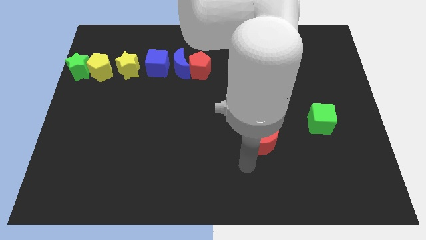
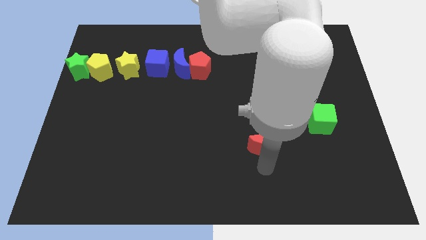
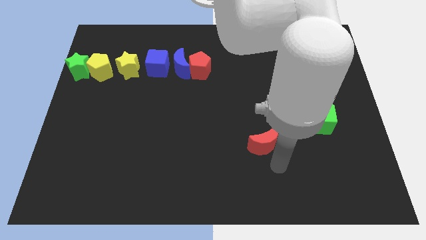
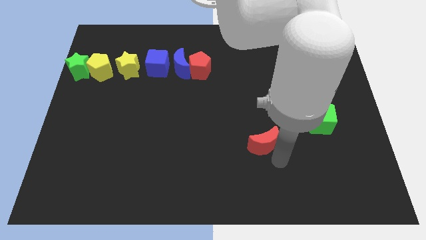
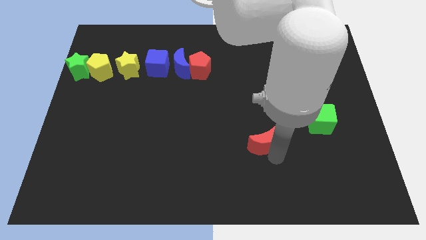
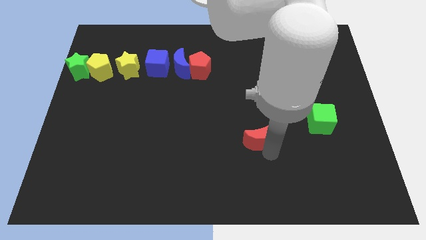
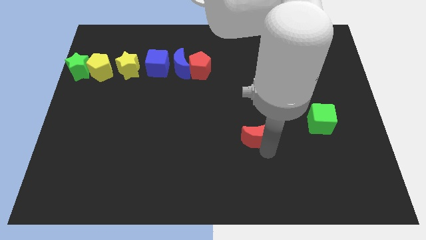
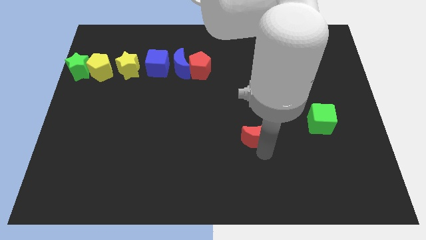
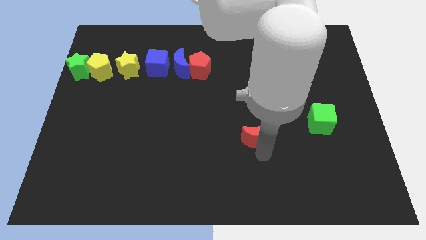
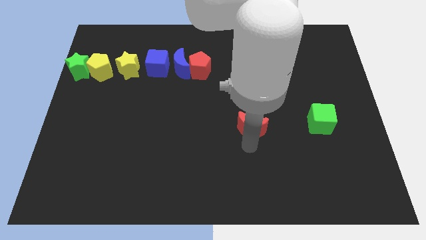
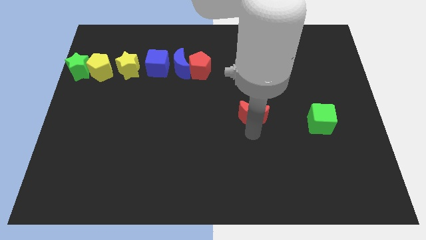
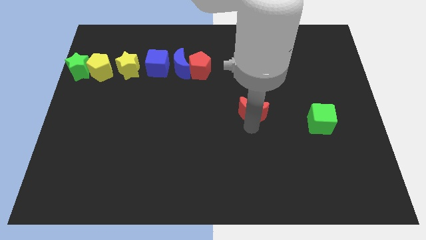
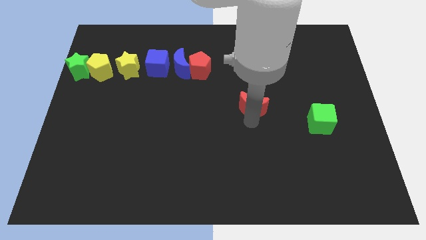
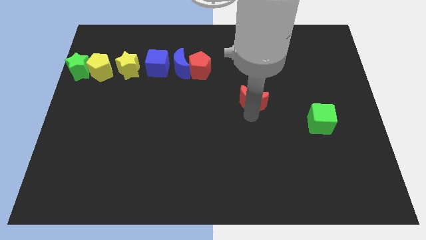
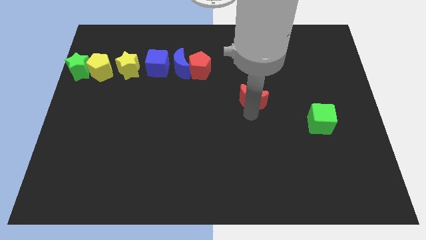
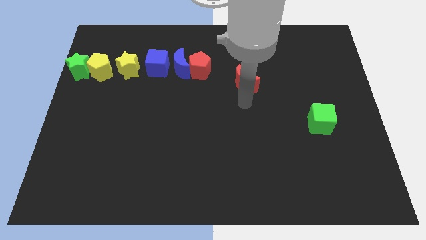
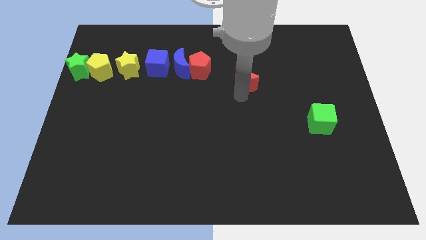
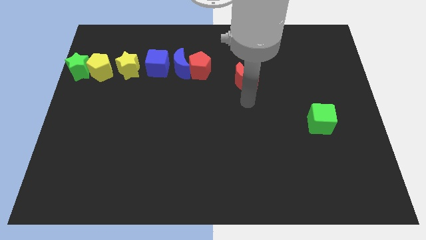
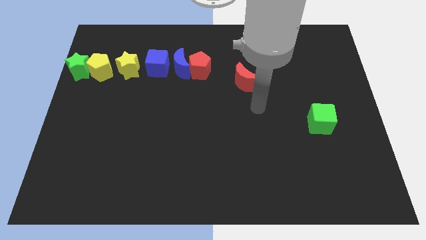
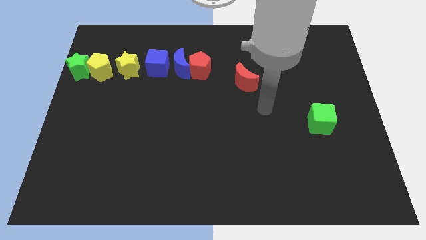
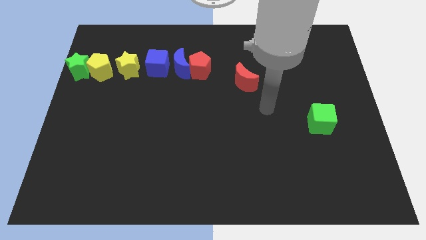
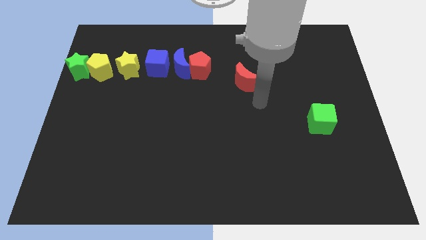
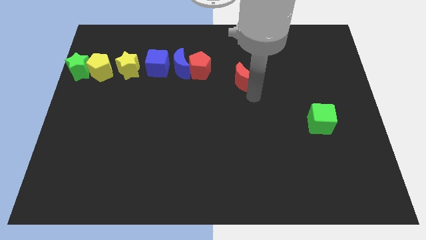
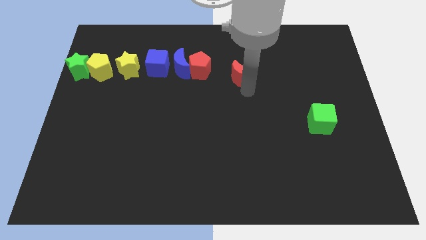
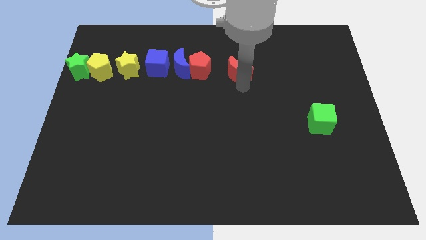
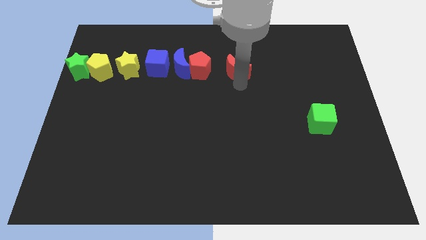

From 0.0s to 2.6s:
move the red crescent to the right of the red pentagon

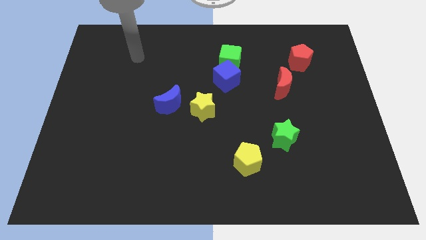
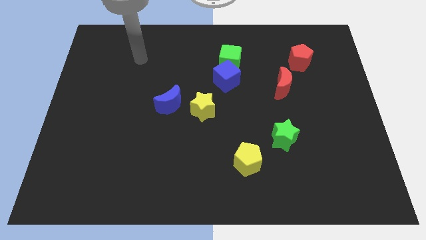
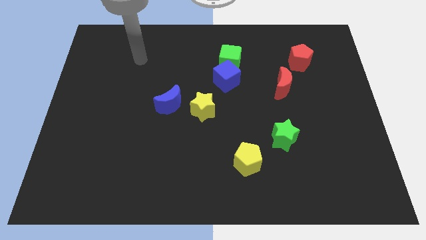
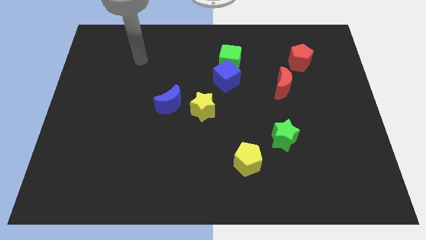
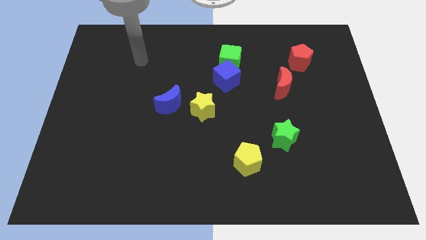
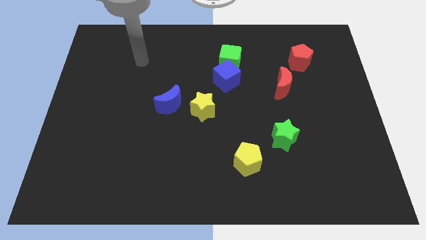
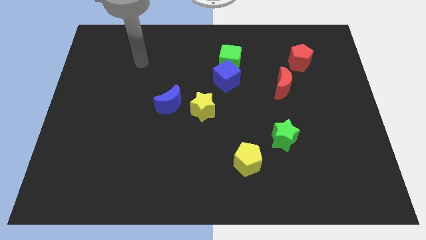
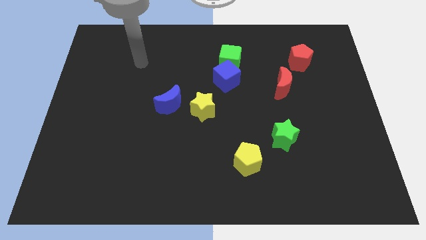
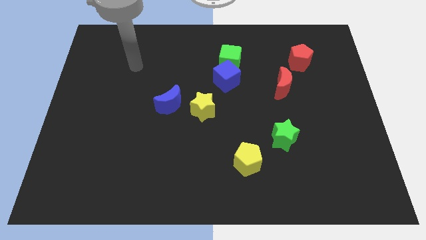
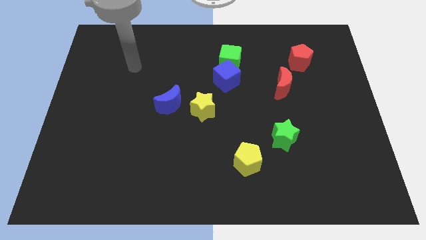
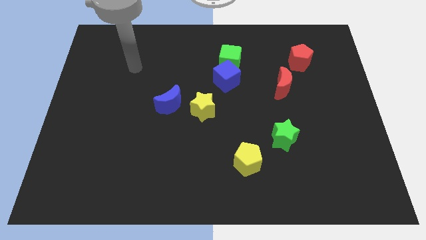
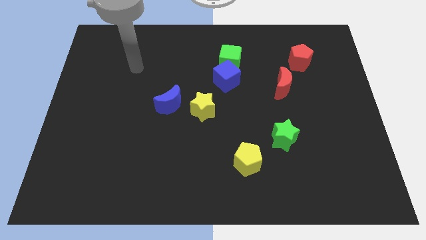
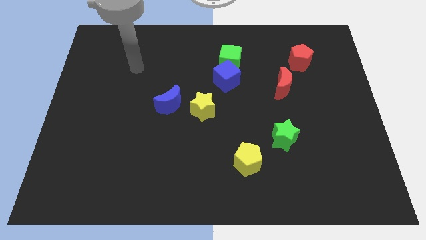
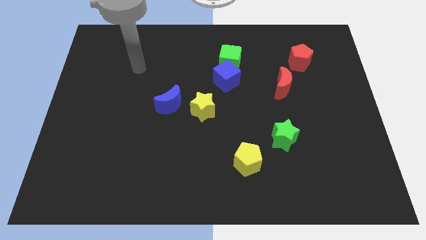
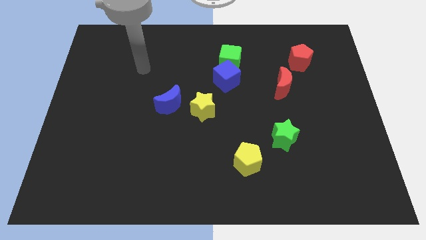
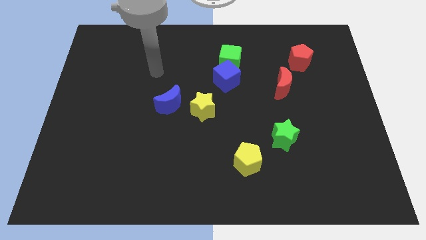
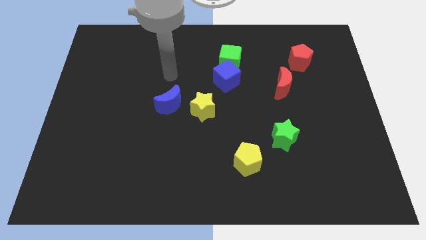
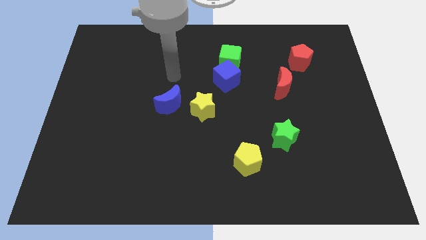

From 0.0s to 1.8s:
put your hand vertically above the blue moon

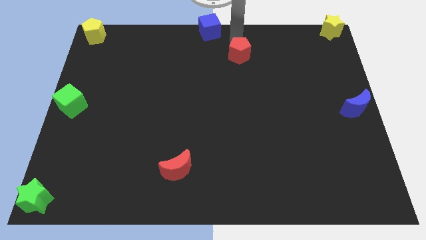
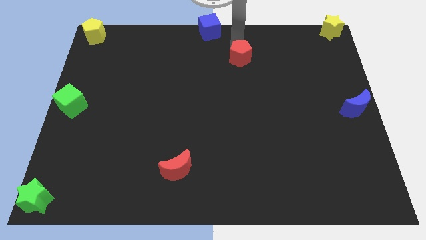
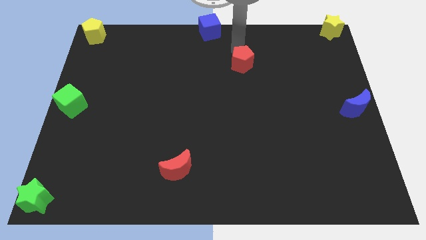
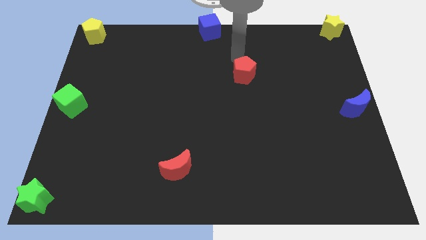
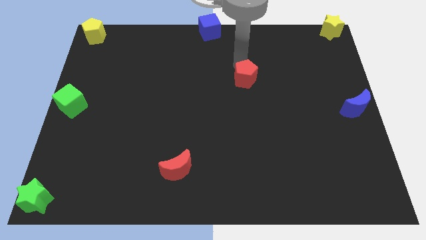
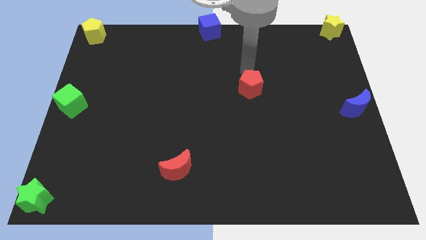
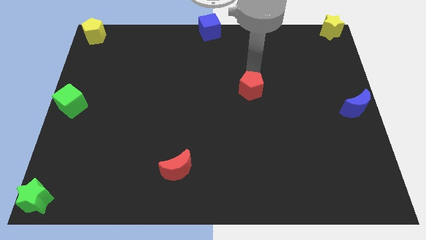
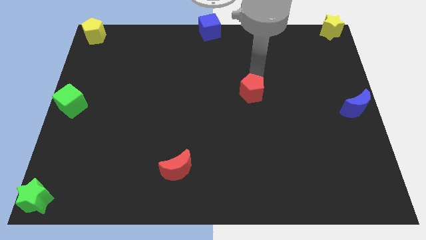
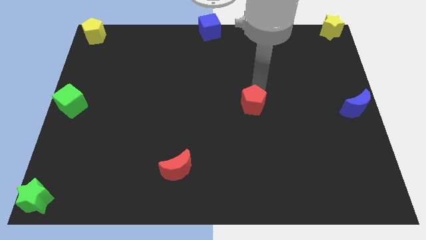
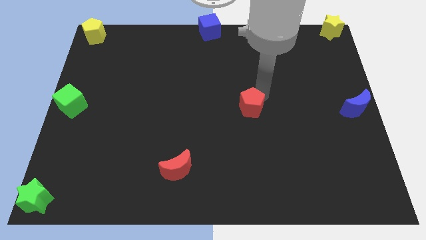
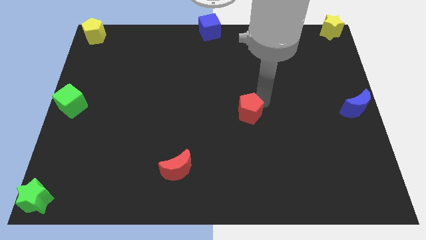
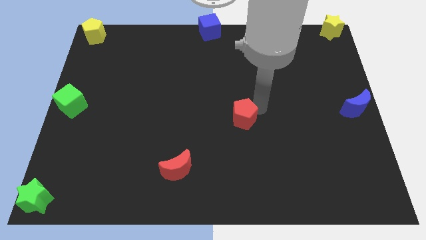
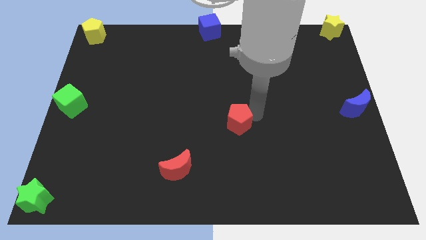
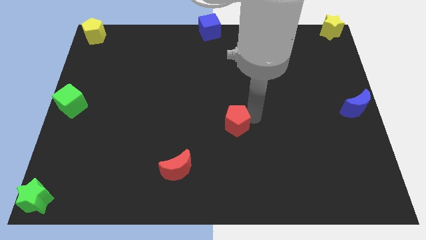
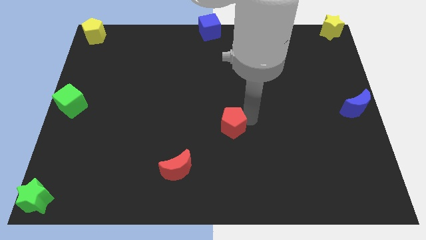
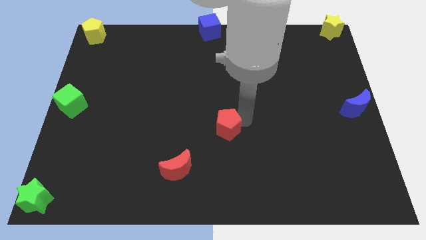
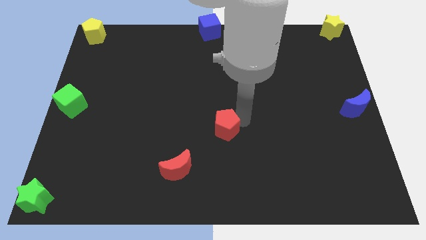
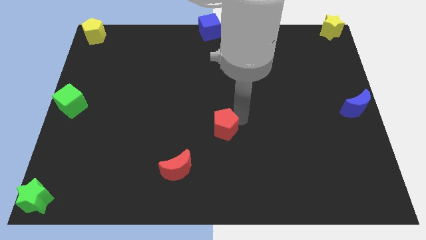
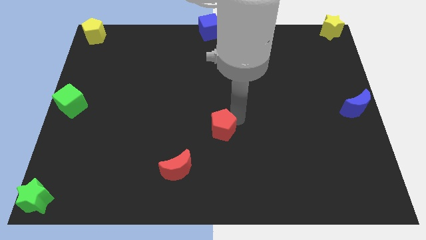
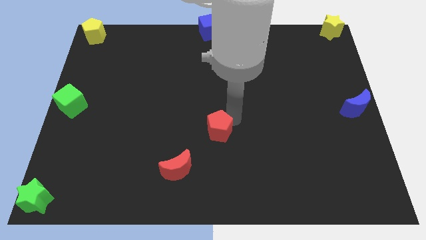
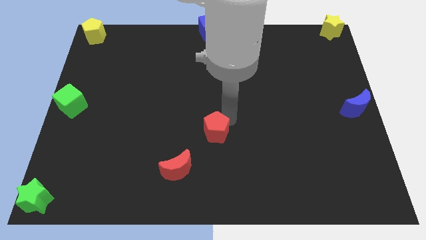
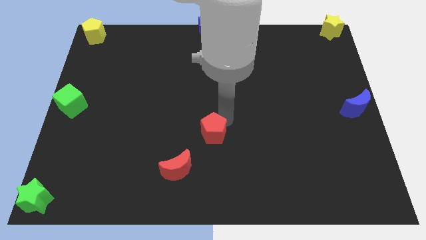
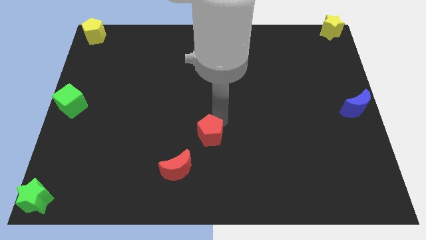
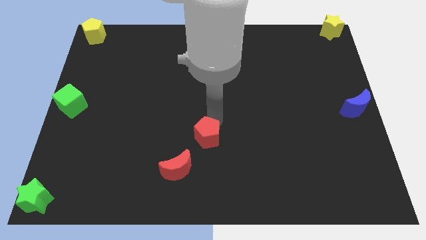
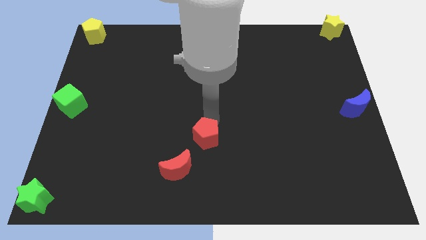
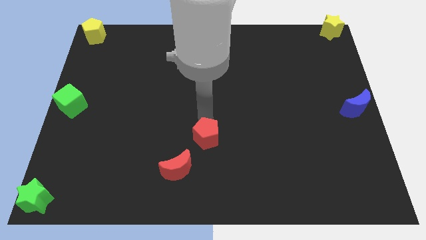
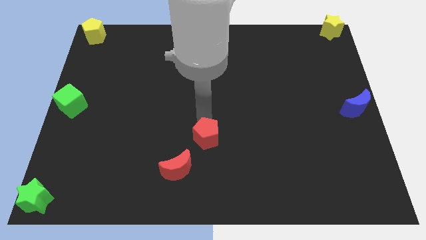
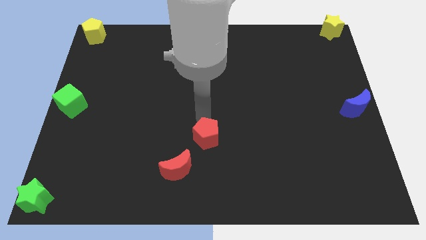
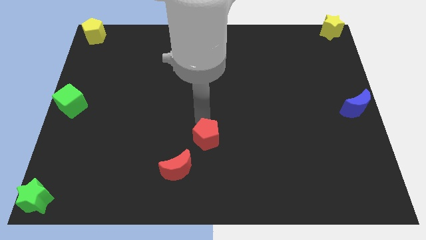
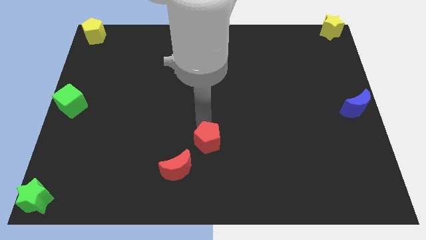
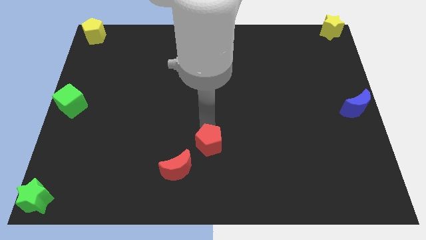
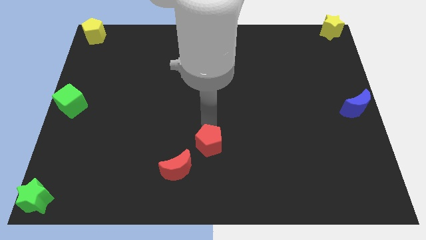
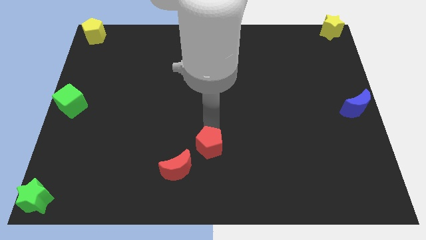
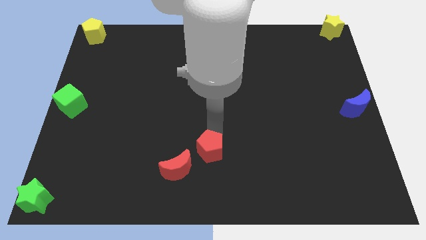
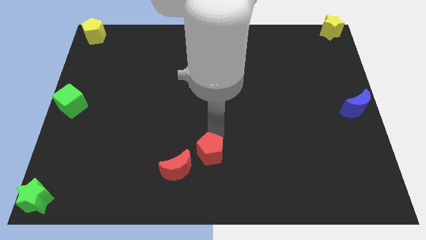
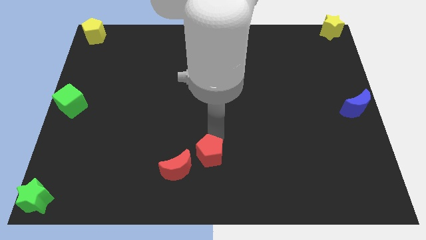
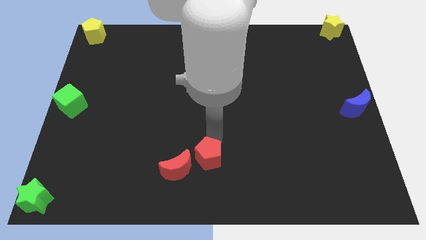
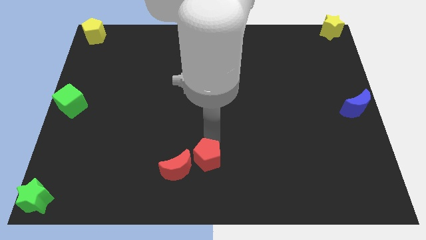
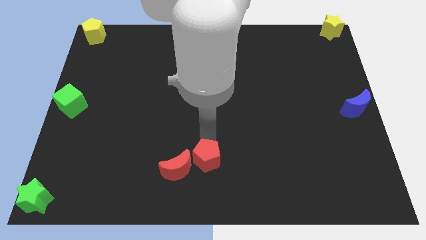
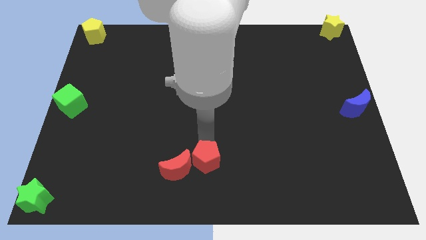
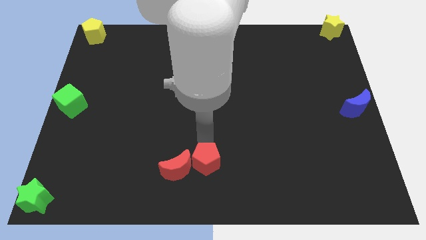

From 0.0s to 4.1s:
move the red pentagon to the right of the red crescent

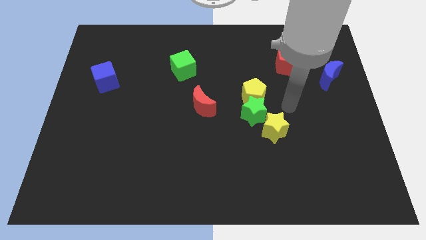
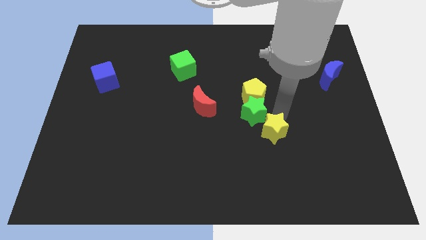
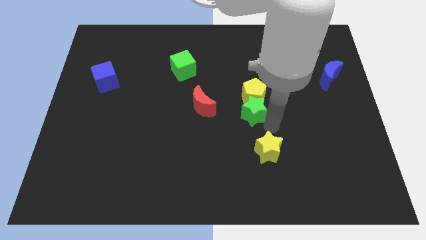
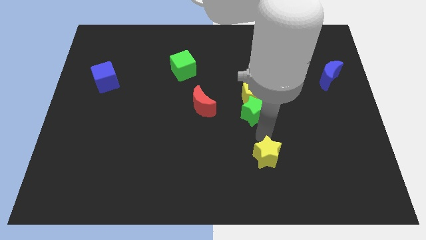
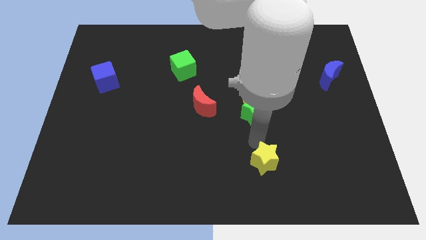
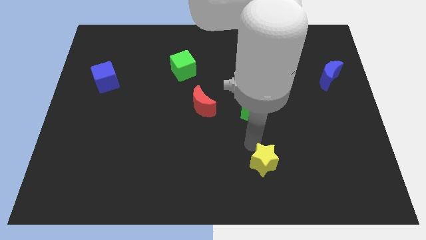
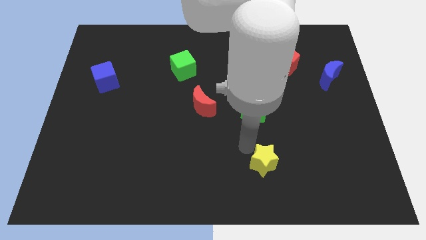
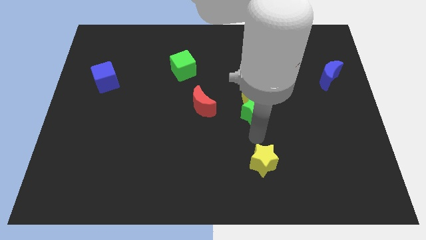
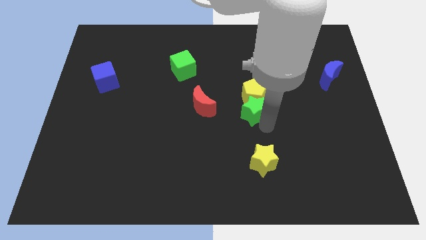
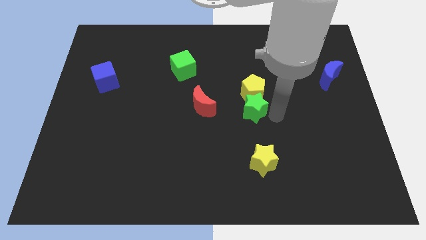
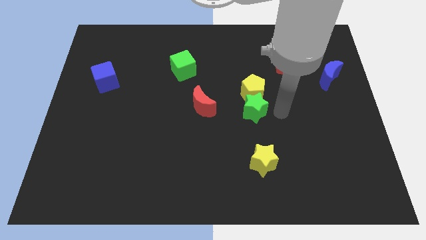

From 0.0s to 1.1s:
separate the yellow star from the green star
